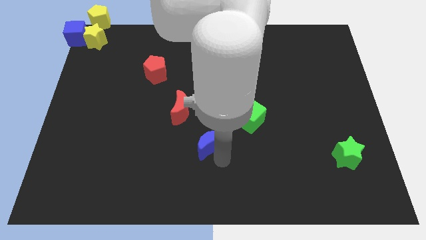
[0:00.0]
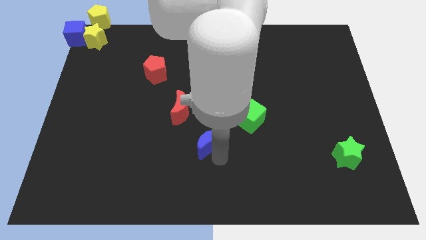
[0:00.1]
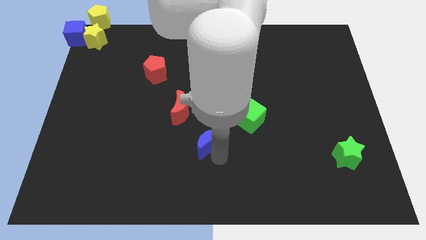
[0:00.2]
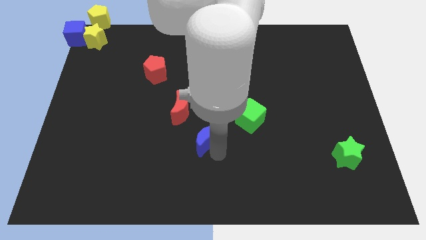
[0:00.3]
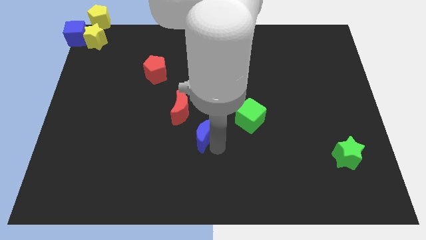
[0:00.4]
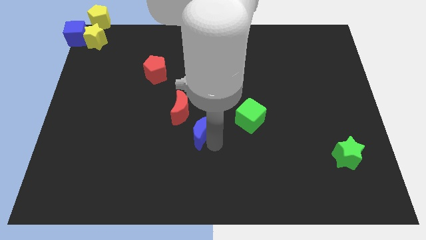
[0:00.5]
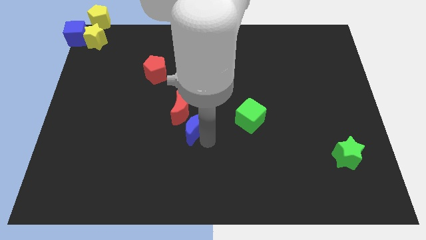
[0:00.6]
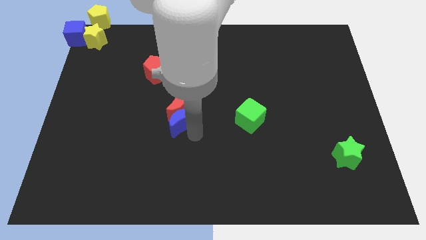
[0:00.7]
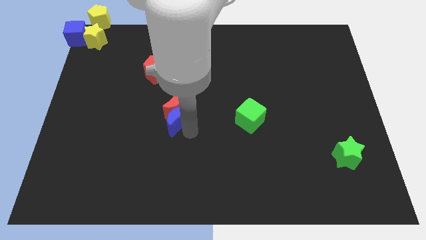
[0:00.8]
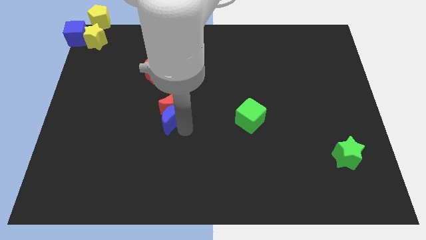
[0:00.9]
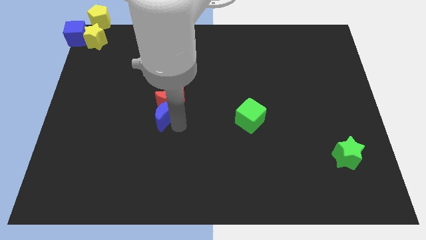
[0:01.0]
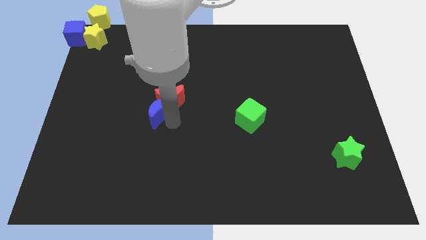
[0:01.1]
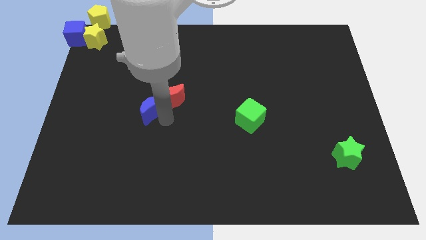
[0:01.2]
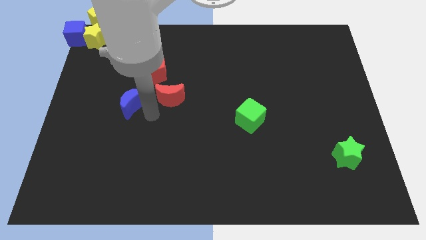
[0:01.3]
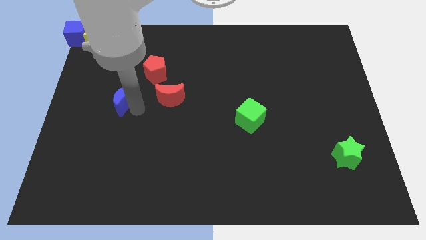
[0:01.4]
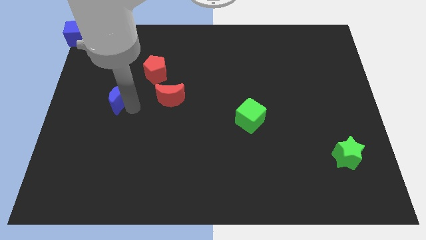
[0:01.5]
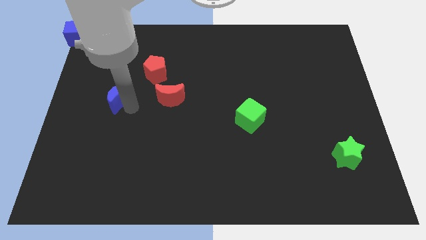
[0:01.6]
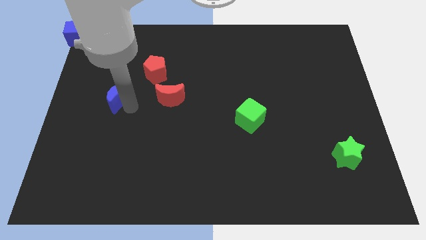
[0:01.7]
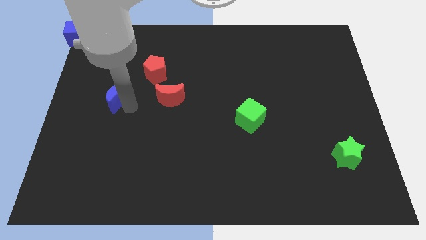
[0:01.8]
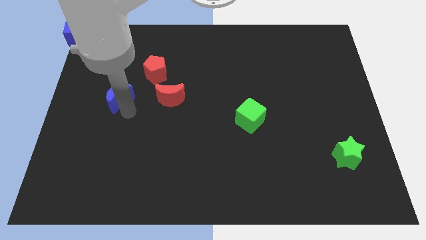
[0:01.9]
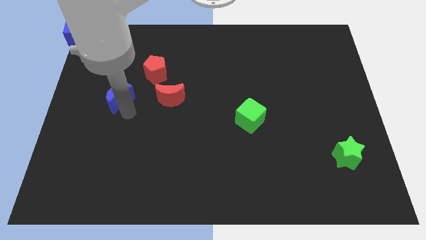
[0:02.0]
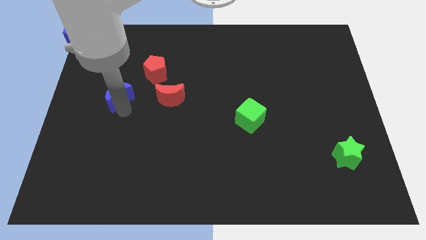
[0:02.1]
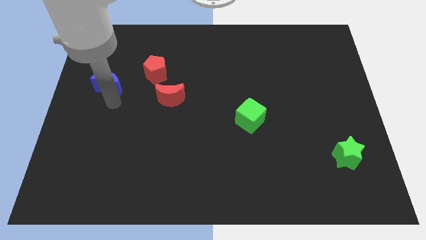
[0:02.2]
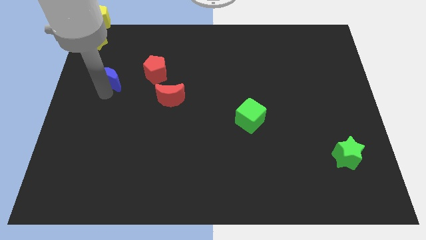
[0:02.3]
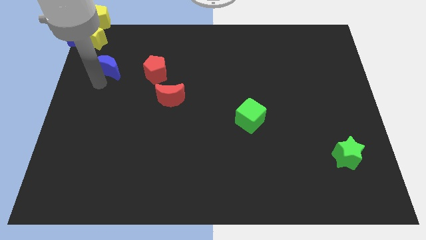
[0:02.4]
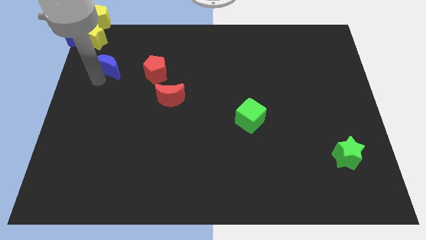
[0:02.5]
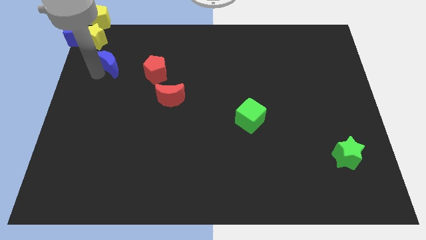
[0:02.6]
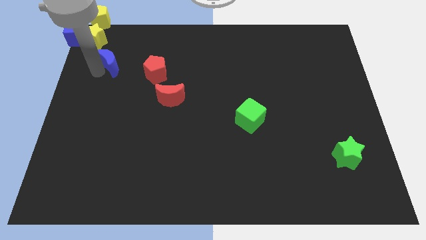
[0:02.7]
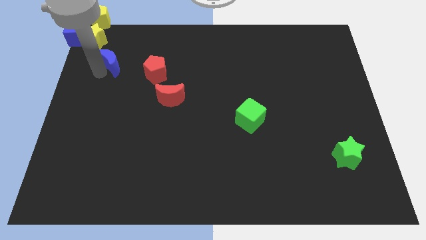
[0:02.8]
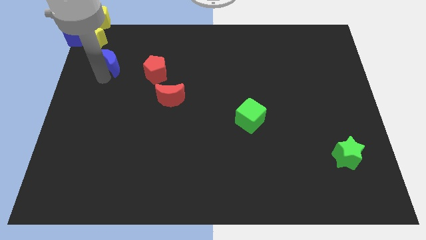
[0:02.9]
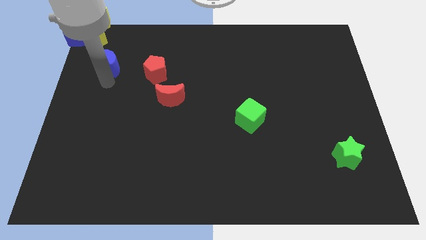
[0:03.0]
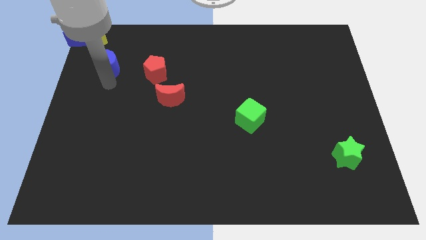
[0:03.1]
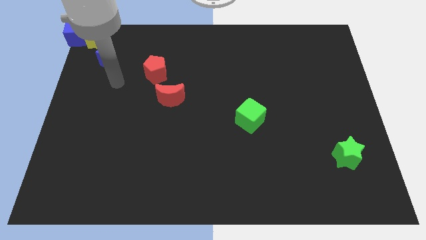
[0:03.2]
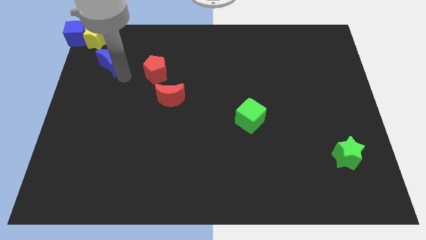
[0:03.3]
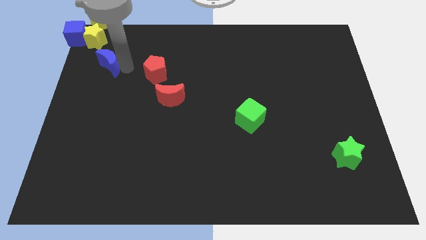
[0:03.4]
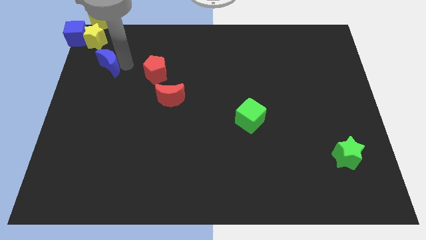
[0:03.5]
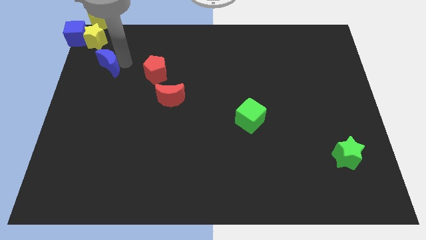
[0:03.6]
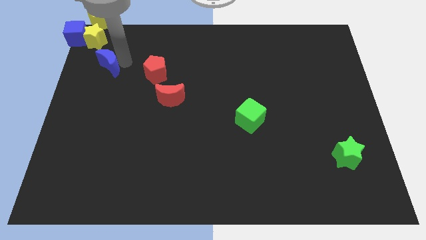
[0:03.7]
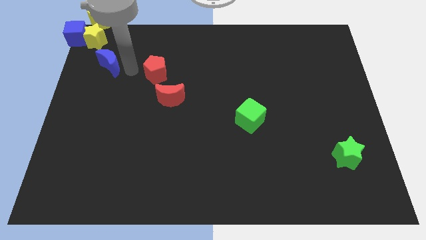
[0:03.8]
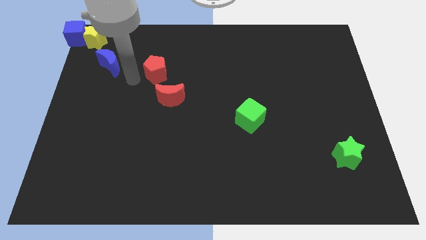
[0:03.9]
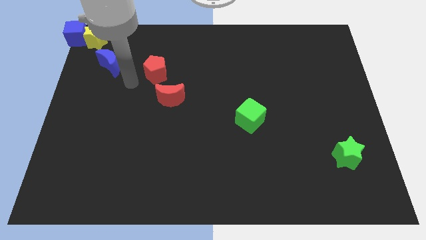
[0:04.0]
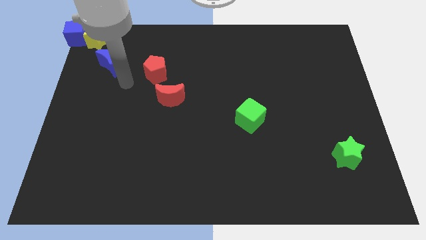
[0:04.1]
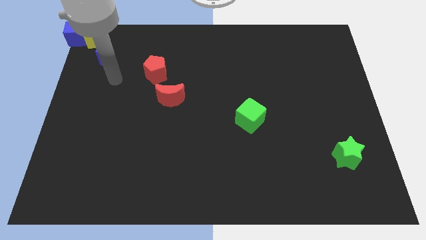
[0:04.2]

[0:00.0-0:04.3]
move blue crescent towards the yellow star

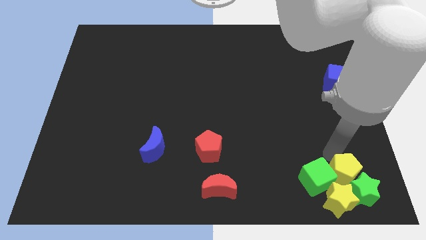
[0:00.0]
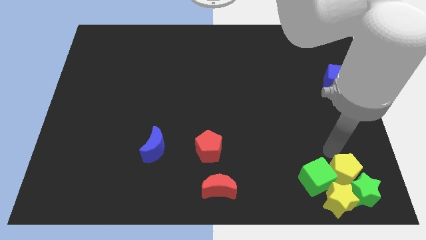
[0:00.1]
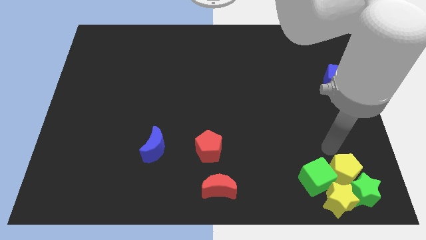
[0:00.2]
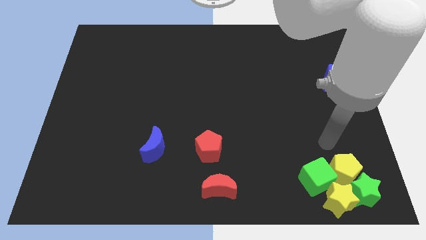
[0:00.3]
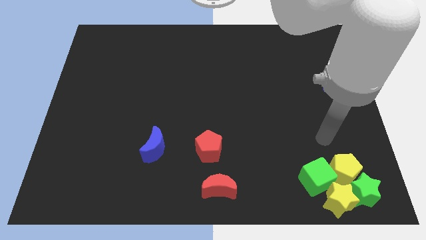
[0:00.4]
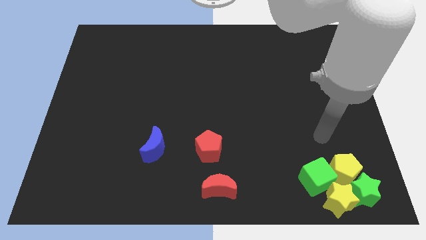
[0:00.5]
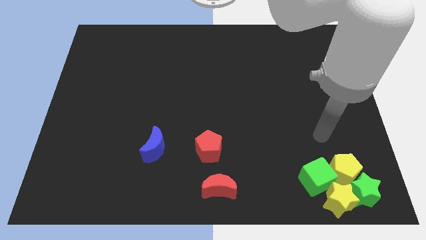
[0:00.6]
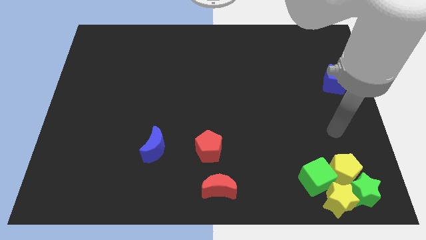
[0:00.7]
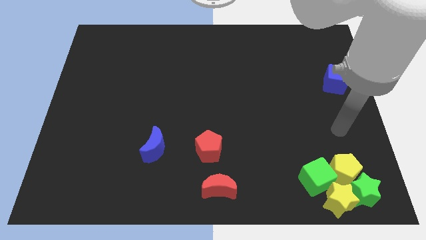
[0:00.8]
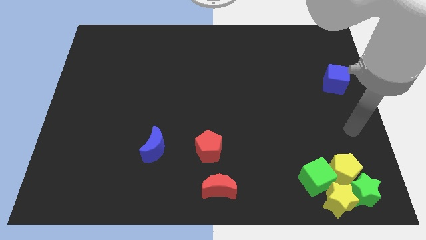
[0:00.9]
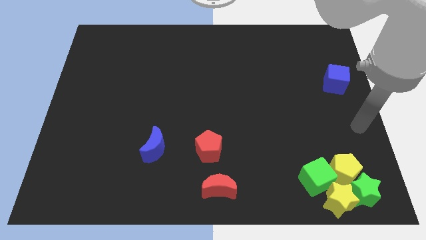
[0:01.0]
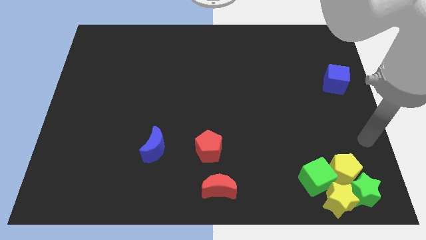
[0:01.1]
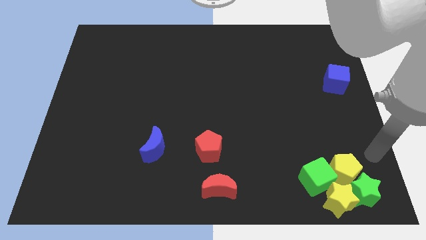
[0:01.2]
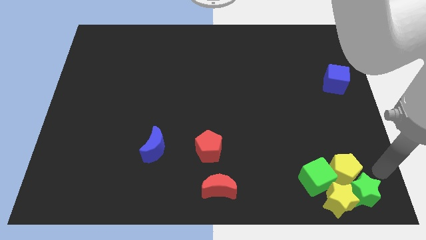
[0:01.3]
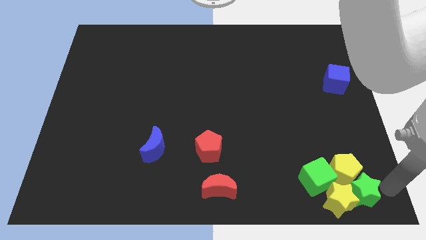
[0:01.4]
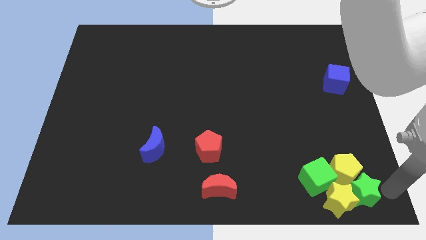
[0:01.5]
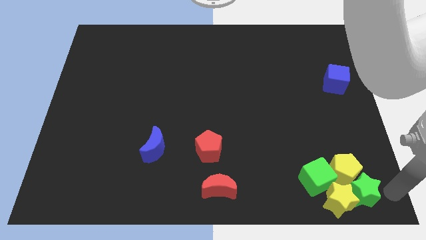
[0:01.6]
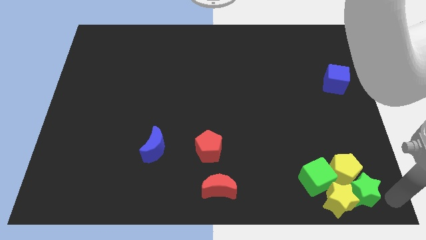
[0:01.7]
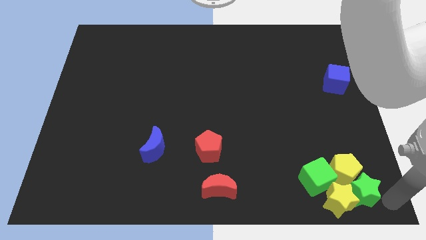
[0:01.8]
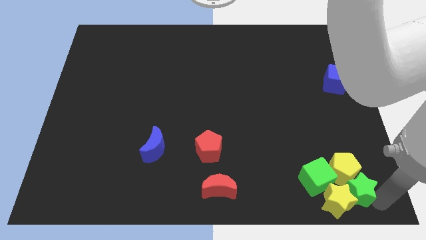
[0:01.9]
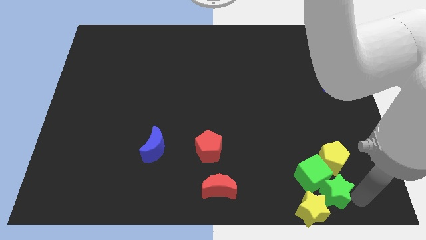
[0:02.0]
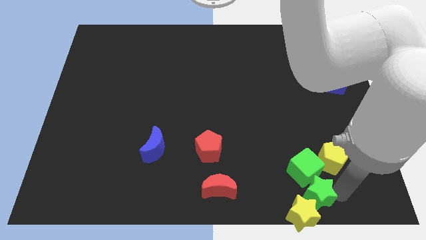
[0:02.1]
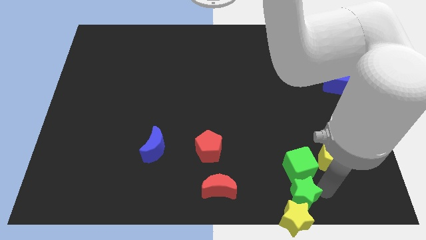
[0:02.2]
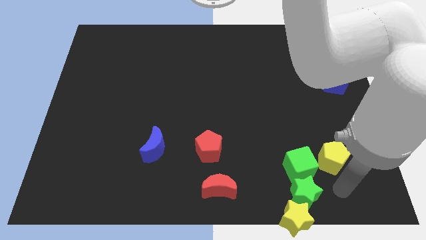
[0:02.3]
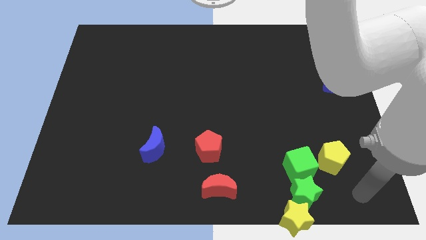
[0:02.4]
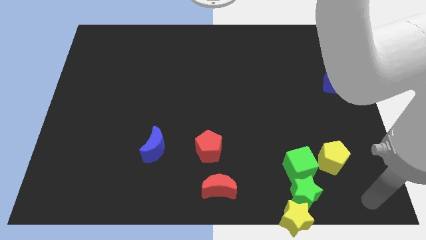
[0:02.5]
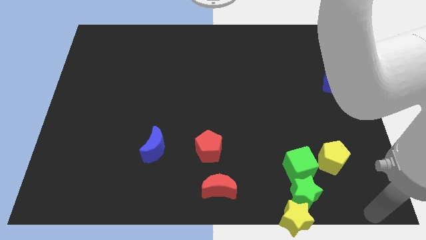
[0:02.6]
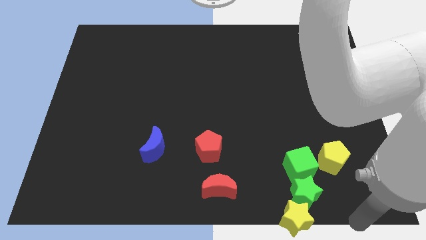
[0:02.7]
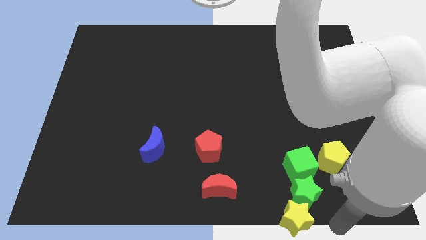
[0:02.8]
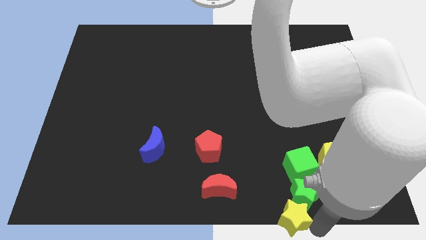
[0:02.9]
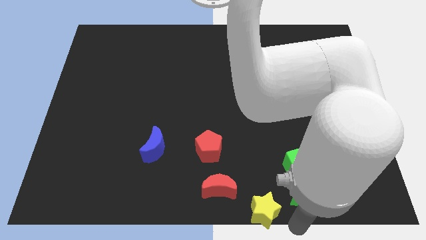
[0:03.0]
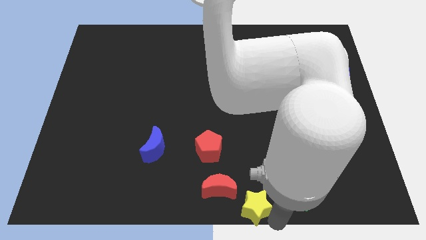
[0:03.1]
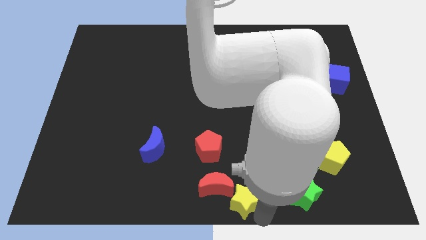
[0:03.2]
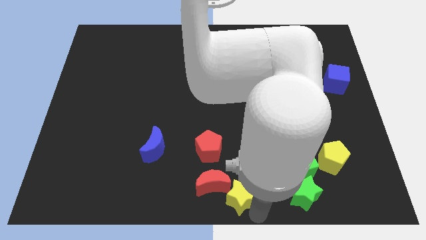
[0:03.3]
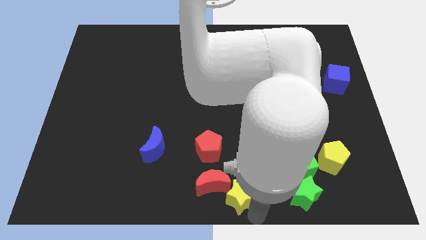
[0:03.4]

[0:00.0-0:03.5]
push the green star into the green cube

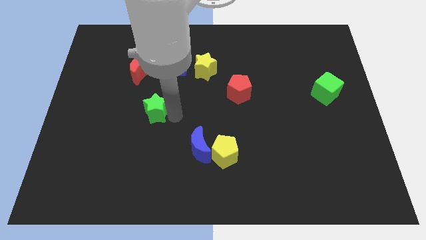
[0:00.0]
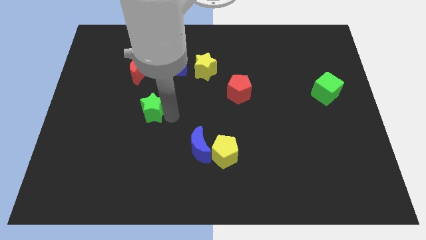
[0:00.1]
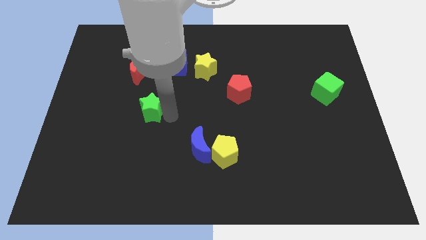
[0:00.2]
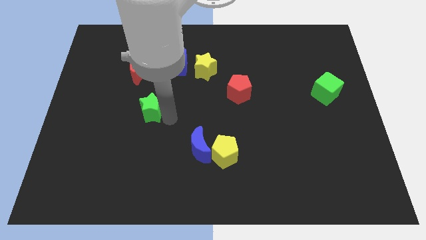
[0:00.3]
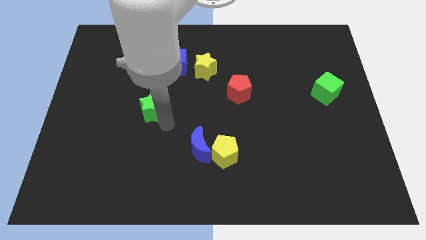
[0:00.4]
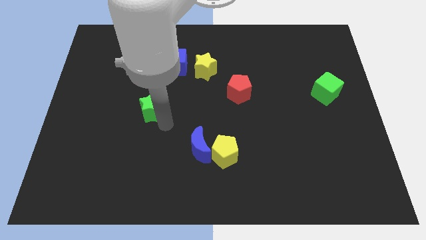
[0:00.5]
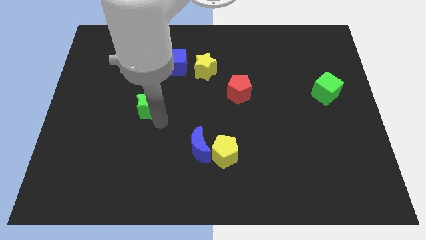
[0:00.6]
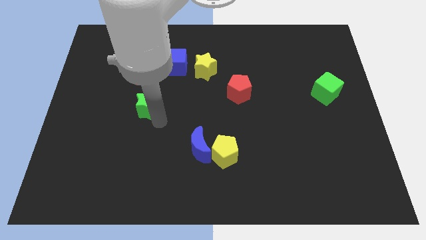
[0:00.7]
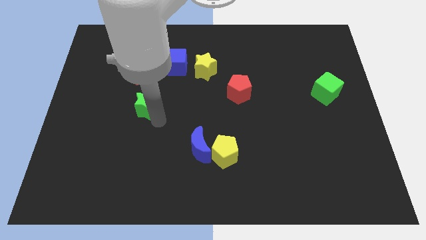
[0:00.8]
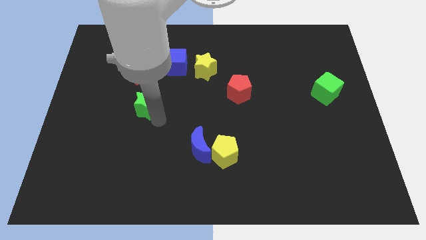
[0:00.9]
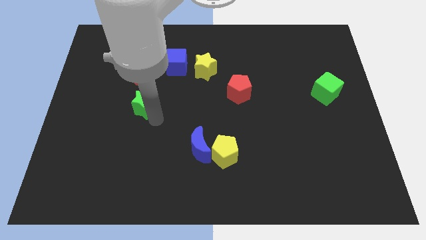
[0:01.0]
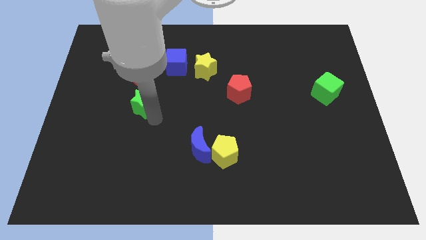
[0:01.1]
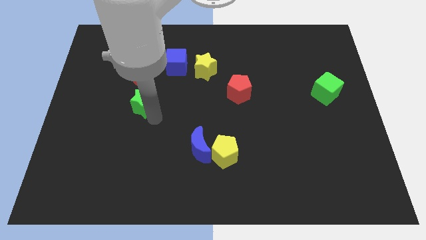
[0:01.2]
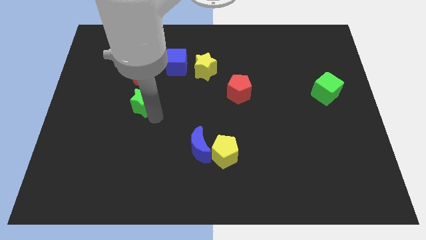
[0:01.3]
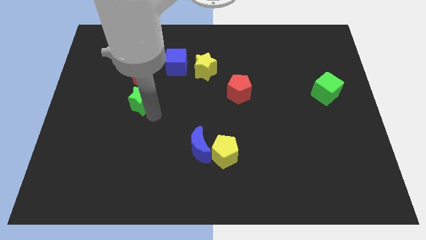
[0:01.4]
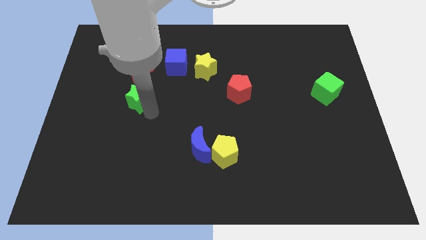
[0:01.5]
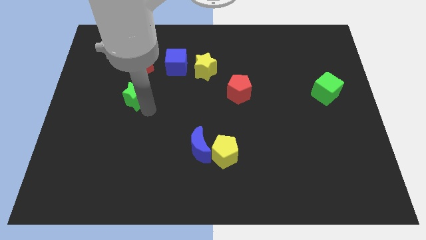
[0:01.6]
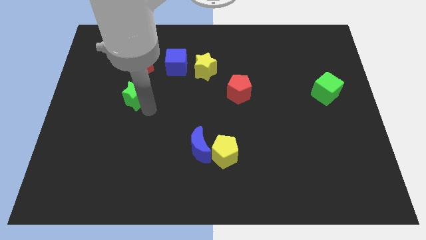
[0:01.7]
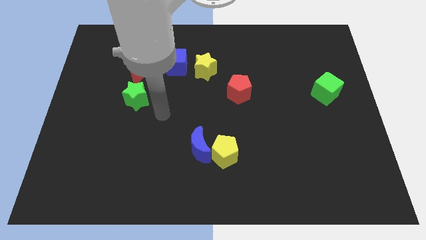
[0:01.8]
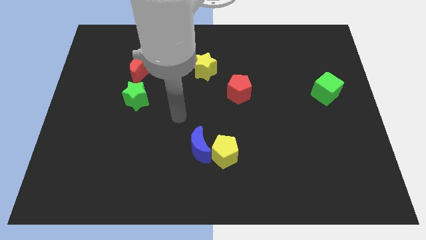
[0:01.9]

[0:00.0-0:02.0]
move the green star below the red crescent
